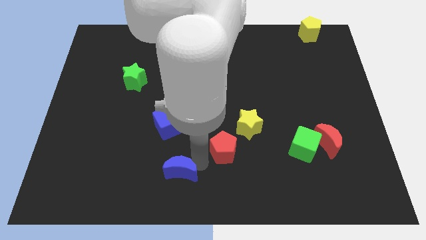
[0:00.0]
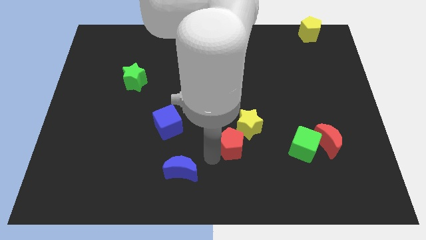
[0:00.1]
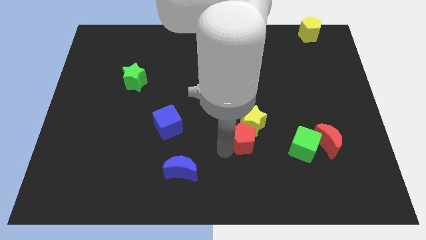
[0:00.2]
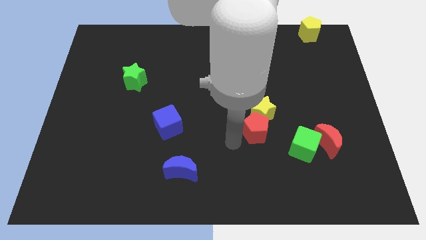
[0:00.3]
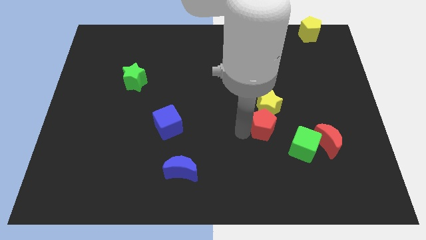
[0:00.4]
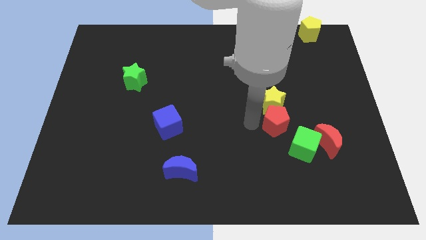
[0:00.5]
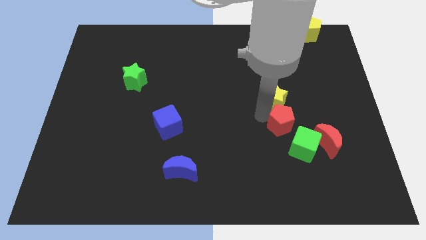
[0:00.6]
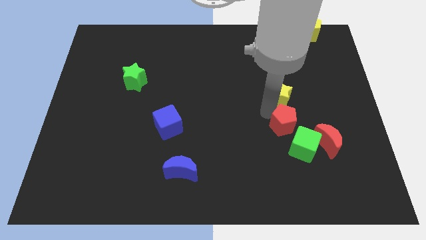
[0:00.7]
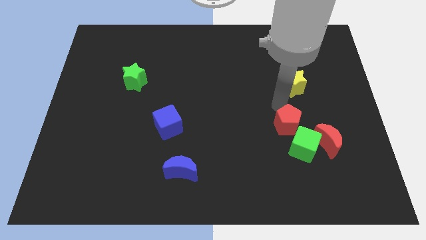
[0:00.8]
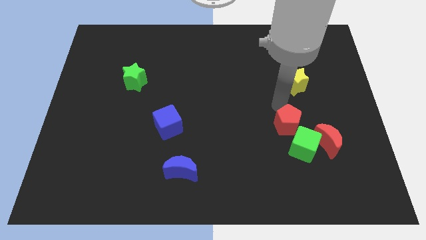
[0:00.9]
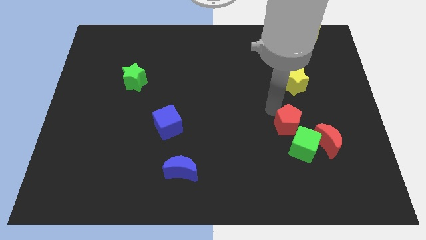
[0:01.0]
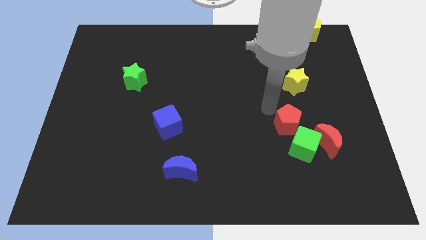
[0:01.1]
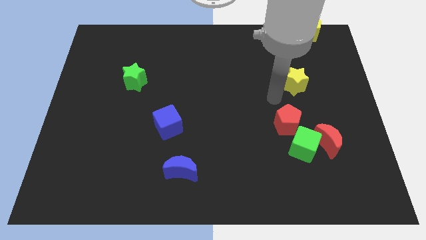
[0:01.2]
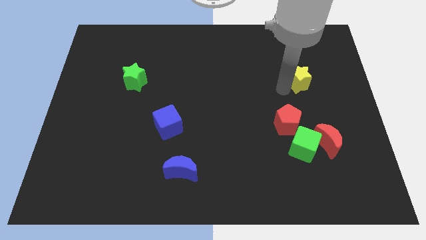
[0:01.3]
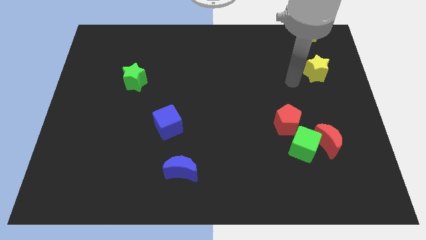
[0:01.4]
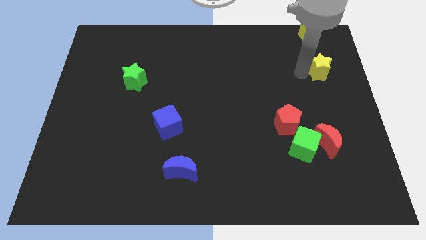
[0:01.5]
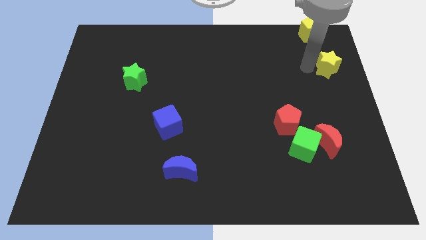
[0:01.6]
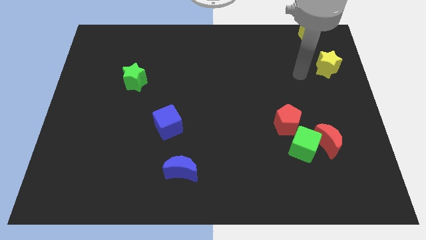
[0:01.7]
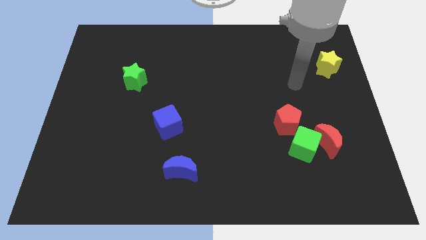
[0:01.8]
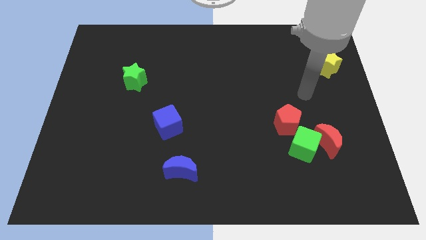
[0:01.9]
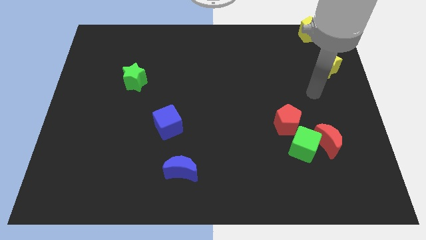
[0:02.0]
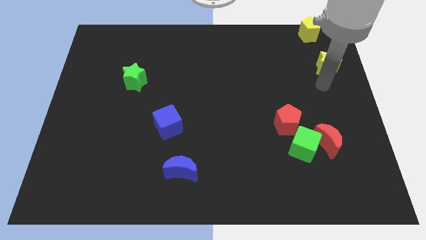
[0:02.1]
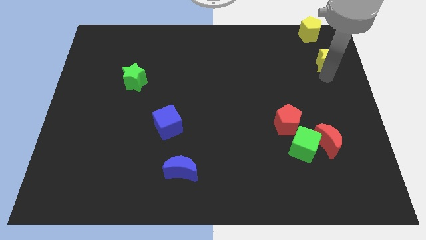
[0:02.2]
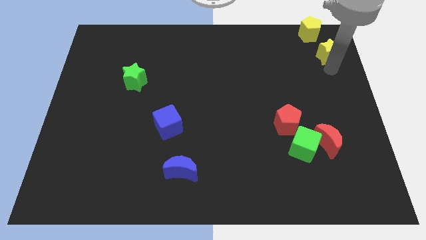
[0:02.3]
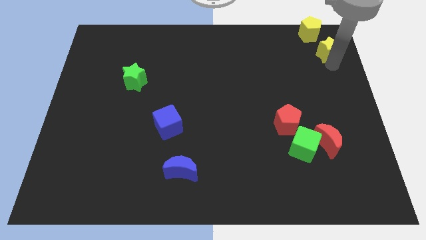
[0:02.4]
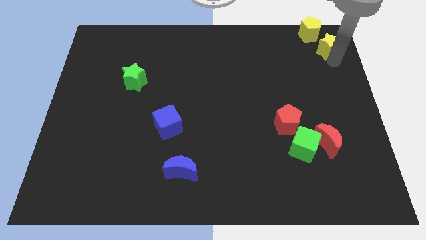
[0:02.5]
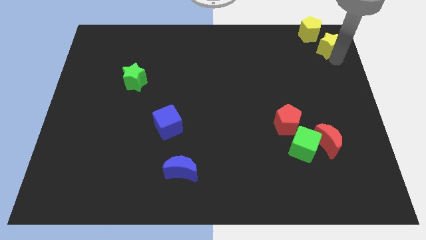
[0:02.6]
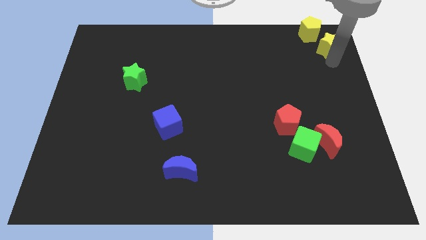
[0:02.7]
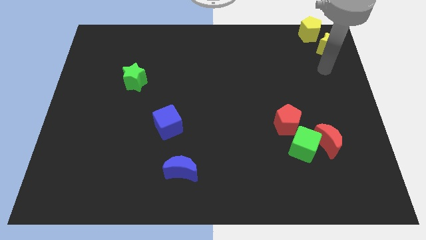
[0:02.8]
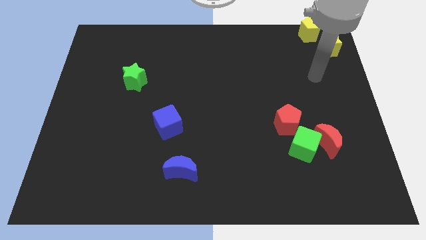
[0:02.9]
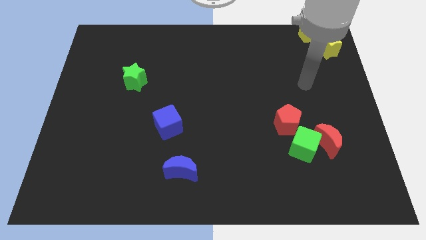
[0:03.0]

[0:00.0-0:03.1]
move the yellow star to the top right corner

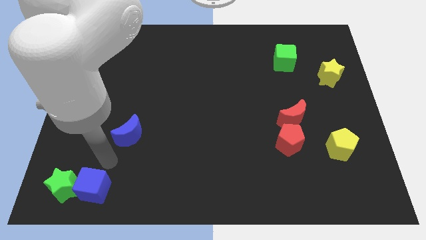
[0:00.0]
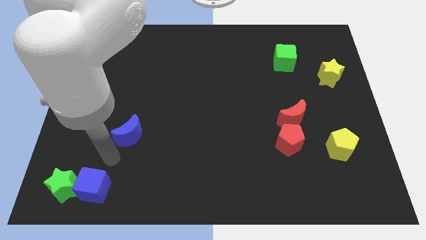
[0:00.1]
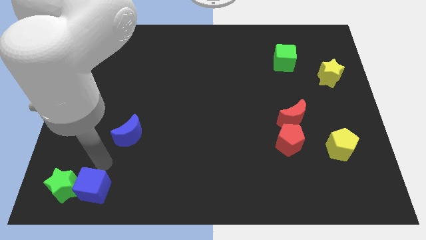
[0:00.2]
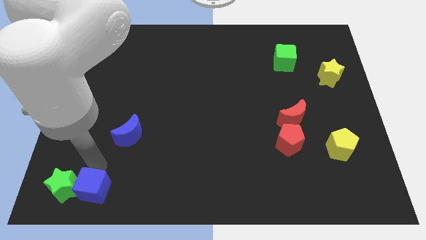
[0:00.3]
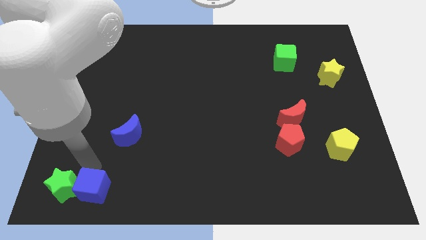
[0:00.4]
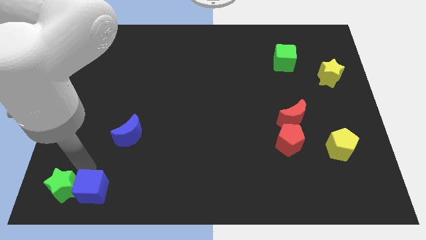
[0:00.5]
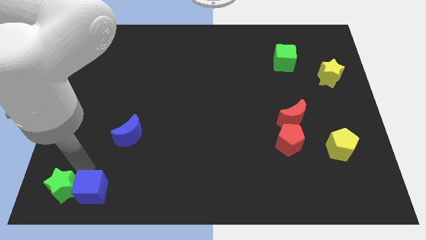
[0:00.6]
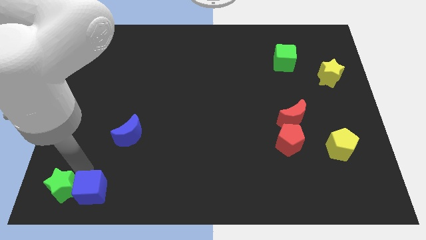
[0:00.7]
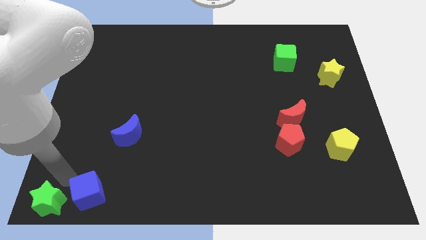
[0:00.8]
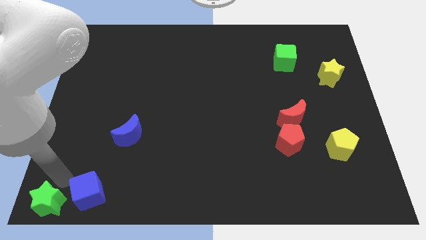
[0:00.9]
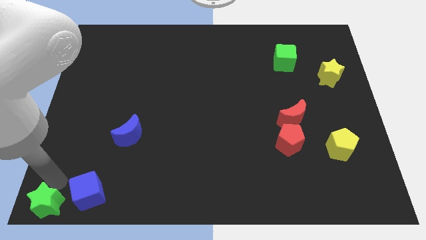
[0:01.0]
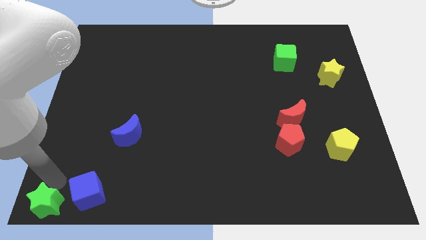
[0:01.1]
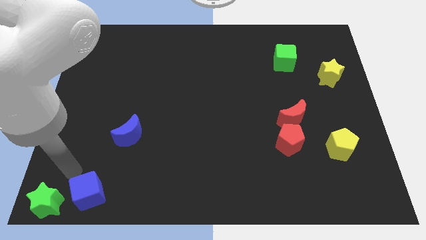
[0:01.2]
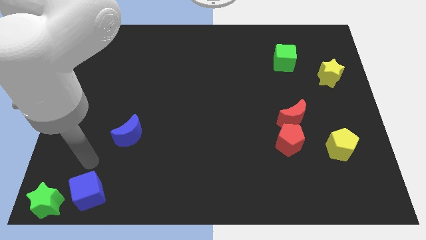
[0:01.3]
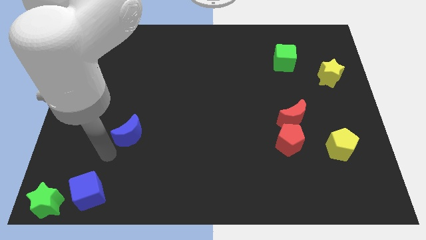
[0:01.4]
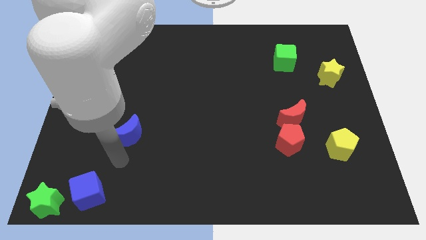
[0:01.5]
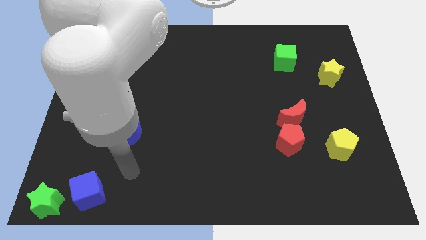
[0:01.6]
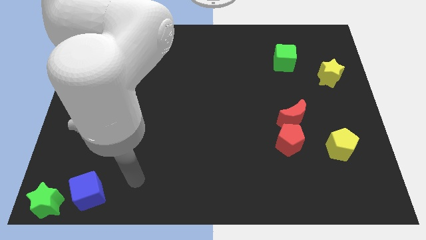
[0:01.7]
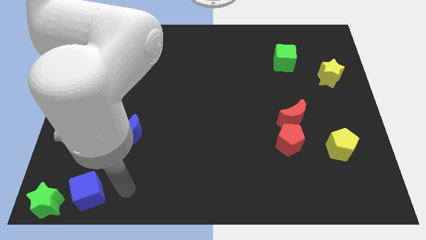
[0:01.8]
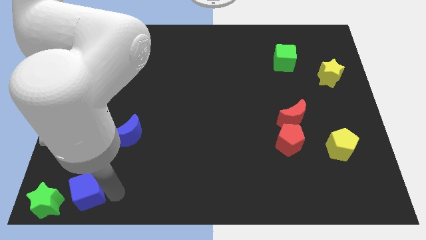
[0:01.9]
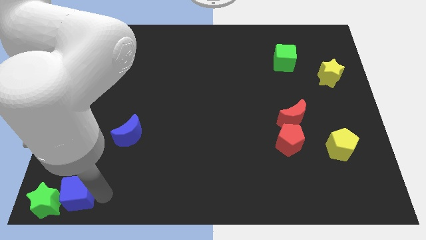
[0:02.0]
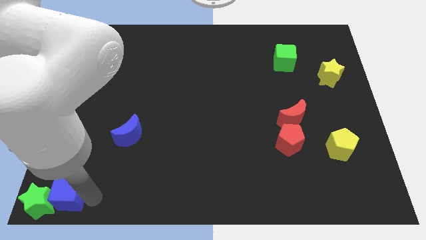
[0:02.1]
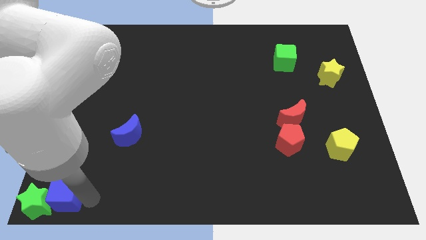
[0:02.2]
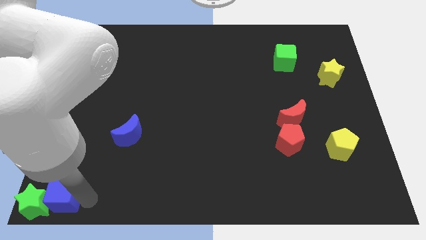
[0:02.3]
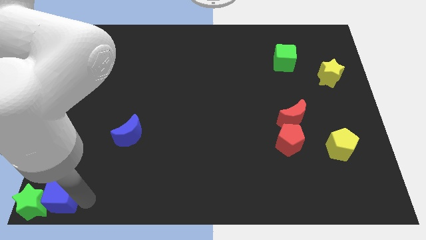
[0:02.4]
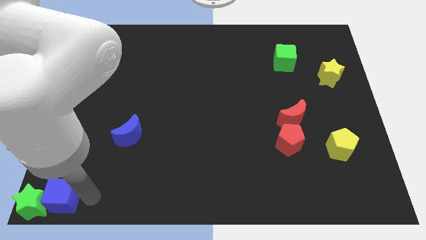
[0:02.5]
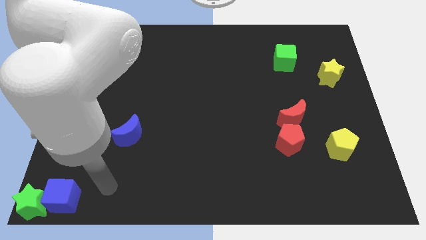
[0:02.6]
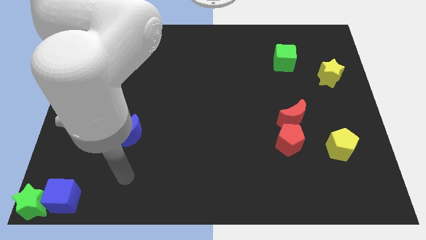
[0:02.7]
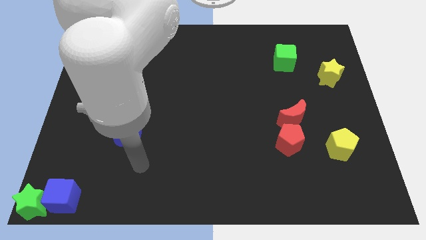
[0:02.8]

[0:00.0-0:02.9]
push the green star and a blue cube to the bottom left corner of the board

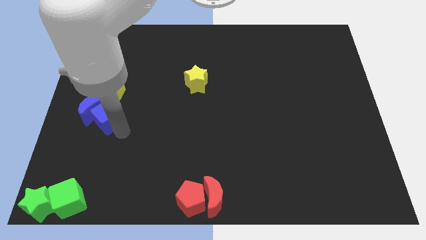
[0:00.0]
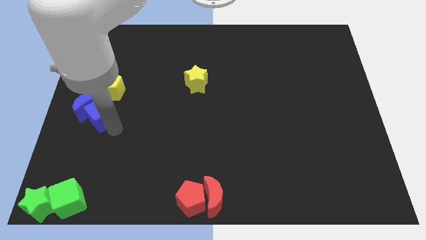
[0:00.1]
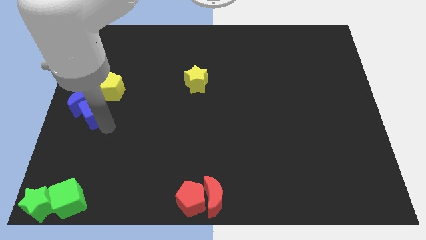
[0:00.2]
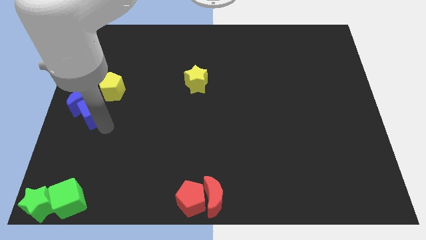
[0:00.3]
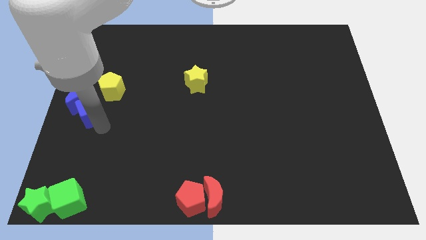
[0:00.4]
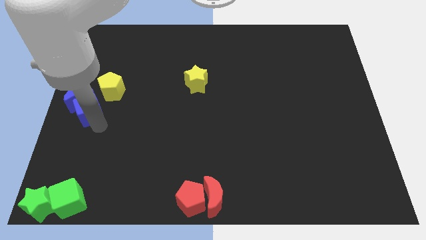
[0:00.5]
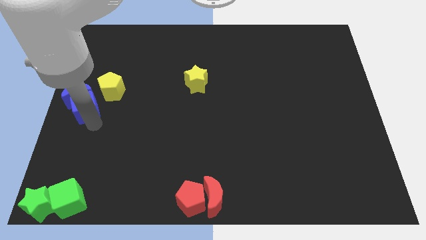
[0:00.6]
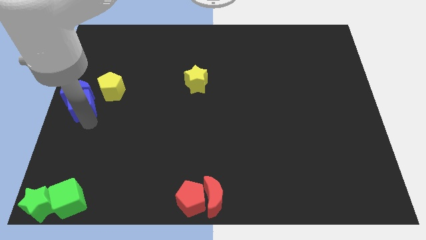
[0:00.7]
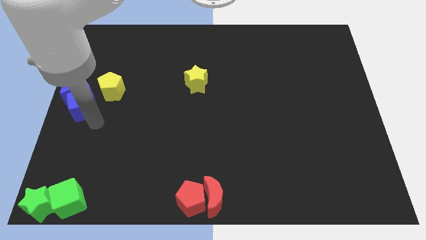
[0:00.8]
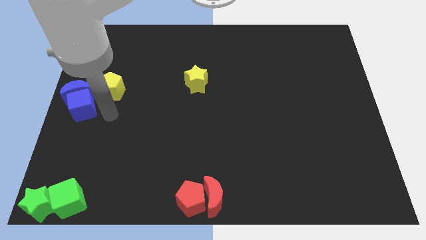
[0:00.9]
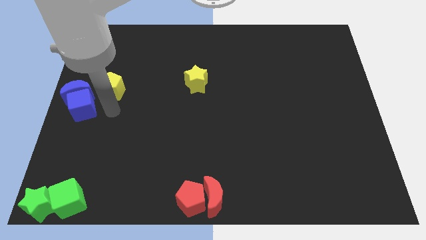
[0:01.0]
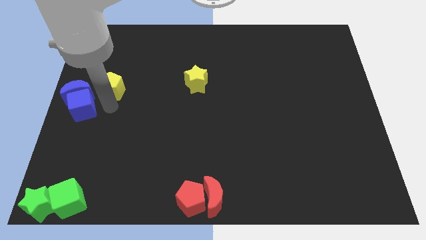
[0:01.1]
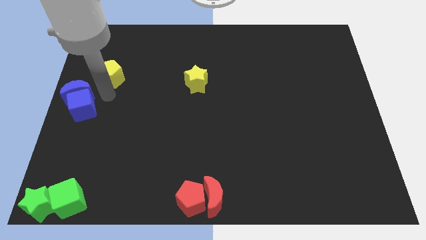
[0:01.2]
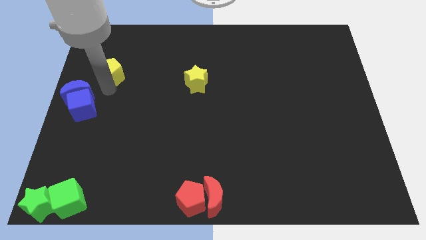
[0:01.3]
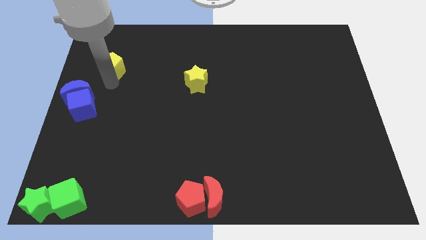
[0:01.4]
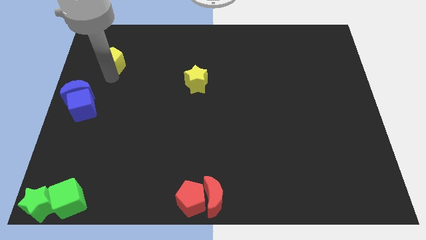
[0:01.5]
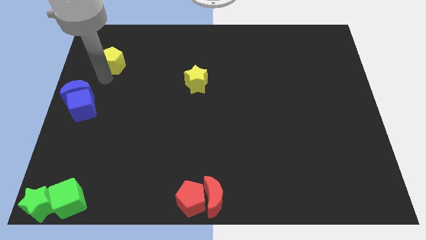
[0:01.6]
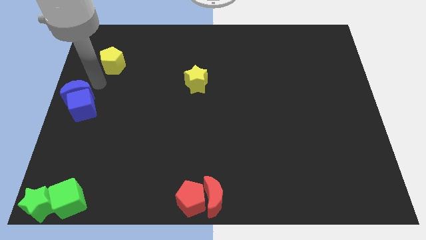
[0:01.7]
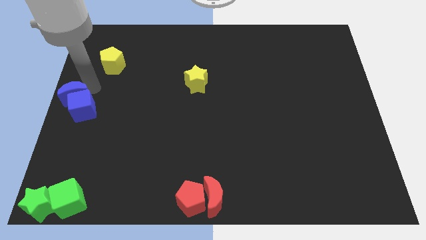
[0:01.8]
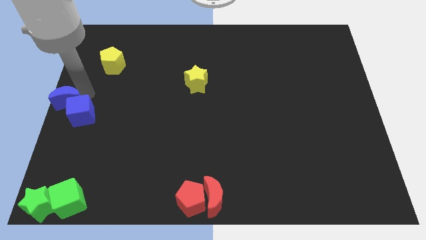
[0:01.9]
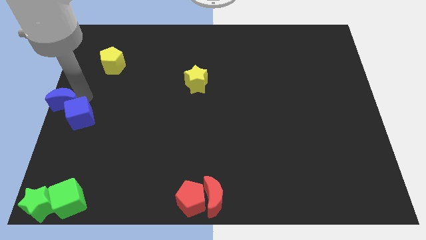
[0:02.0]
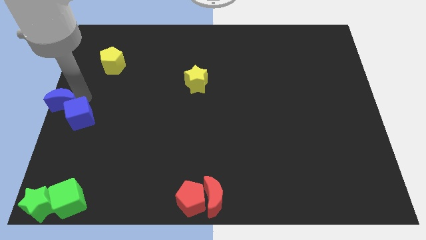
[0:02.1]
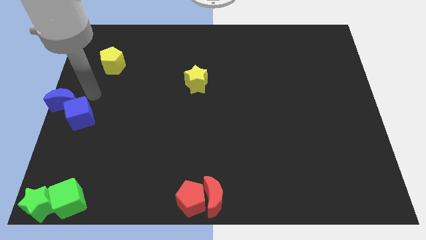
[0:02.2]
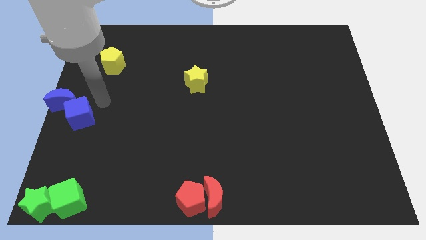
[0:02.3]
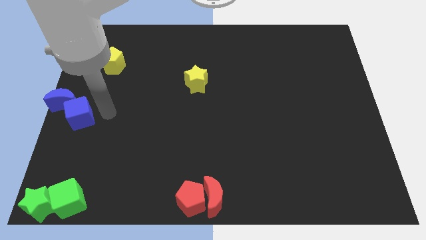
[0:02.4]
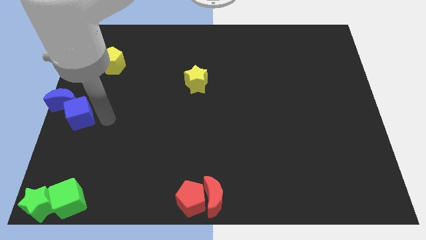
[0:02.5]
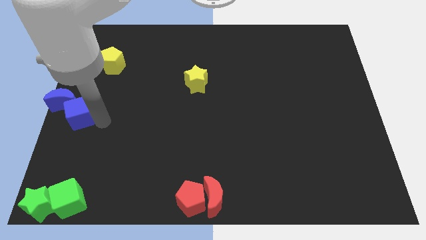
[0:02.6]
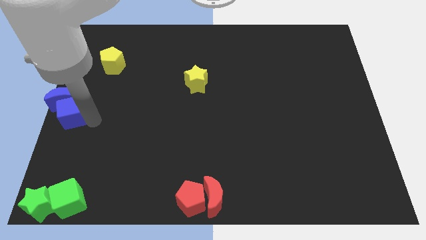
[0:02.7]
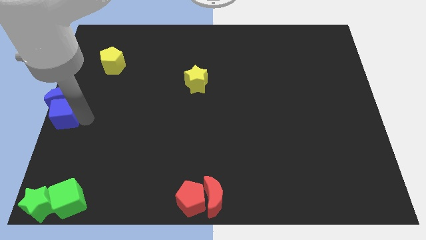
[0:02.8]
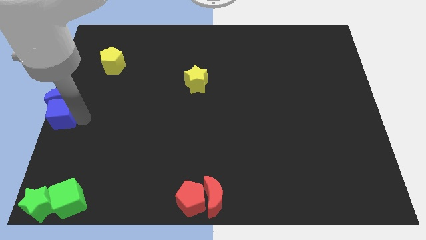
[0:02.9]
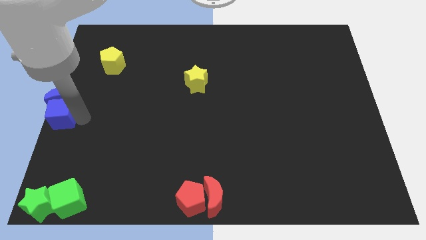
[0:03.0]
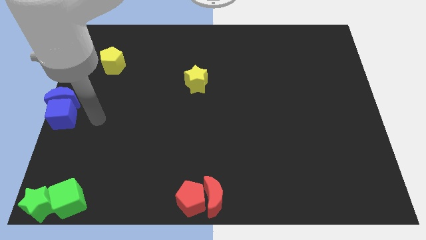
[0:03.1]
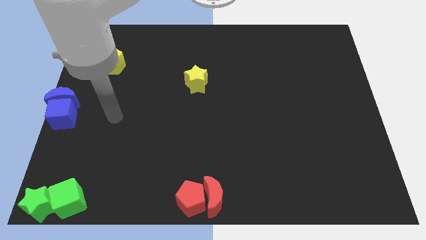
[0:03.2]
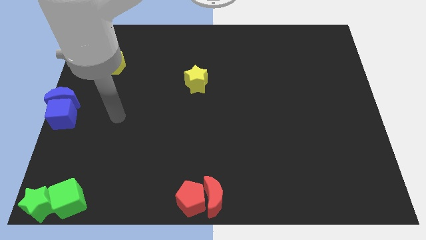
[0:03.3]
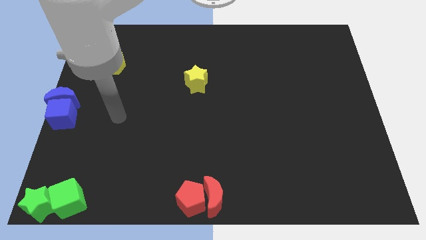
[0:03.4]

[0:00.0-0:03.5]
place both the blue blocks at the center left side of the board
